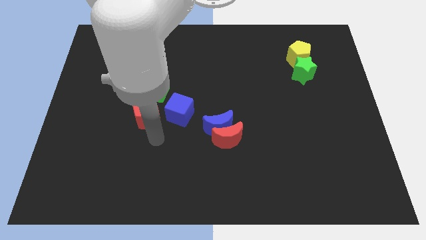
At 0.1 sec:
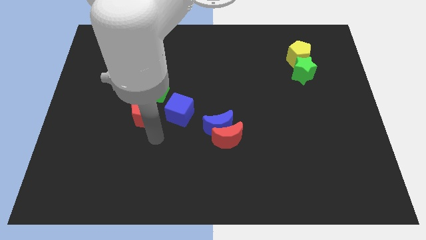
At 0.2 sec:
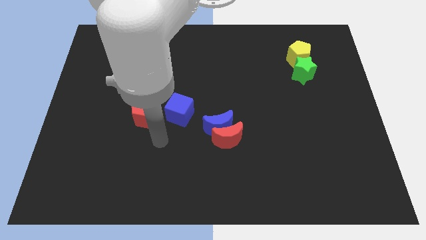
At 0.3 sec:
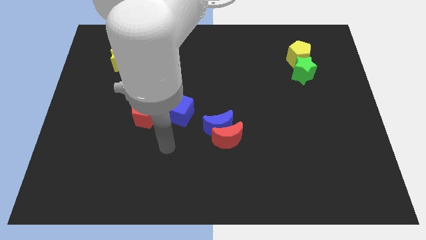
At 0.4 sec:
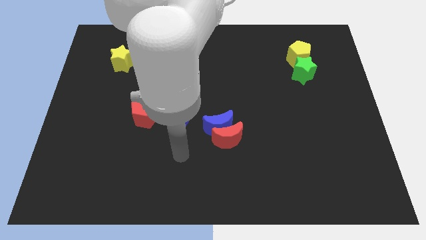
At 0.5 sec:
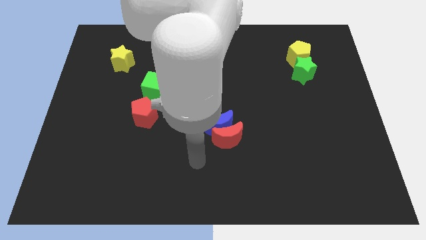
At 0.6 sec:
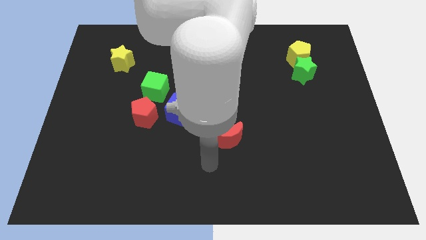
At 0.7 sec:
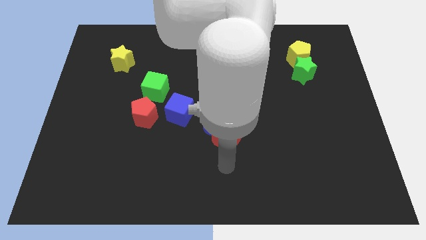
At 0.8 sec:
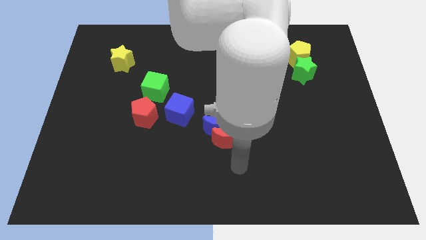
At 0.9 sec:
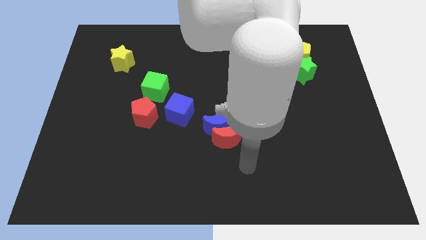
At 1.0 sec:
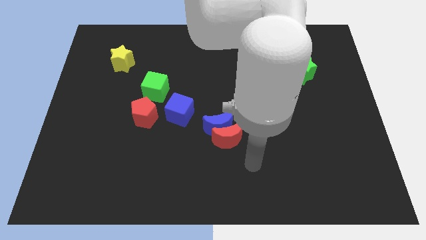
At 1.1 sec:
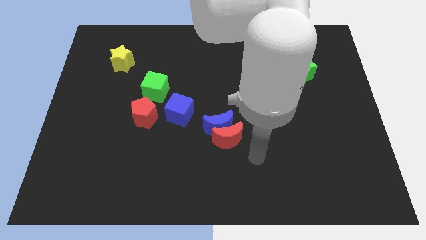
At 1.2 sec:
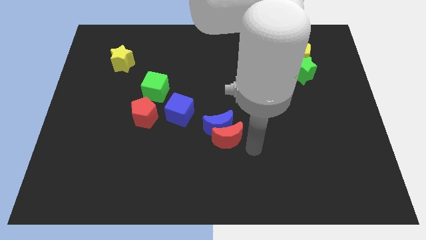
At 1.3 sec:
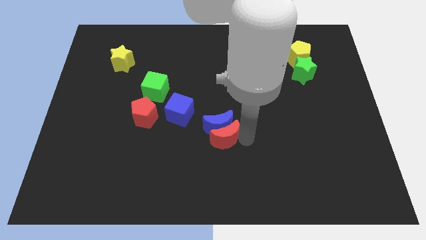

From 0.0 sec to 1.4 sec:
move the arm away from the red pentagon

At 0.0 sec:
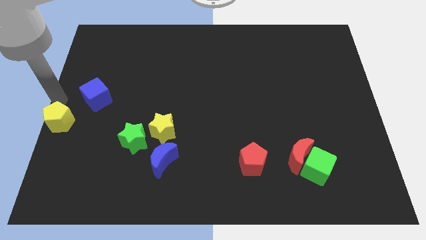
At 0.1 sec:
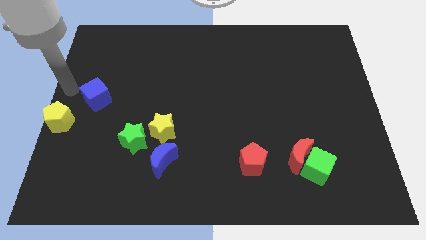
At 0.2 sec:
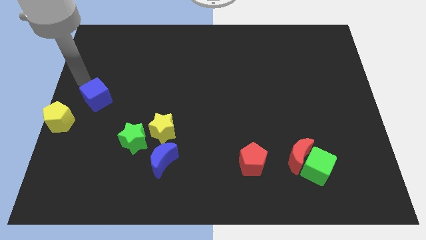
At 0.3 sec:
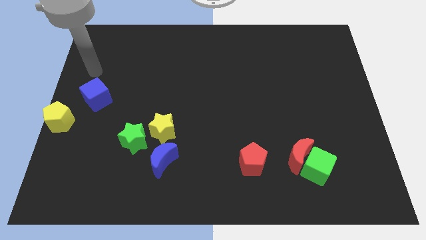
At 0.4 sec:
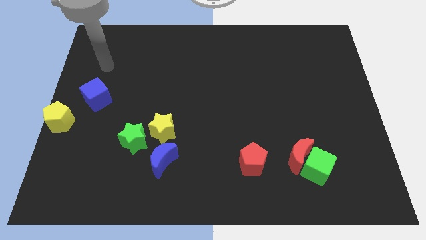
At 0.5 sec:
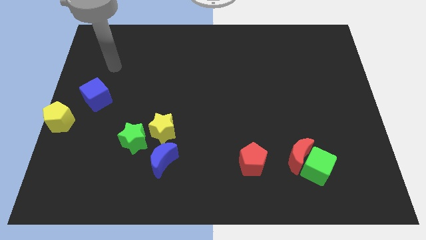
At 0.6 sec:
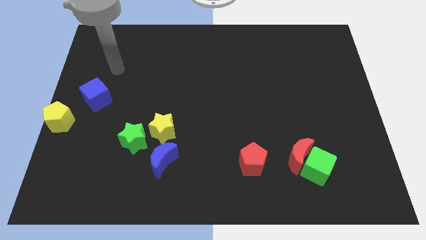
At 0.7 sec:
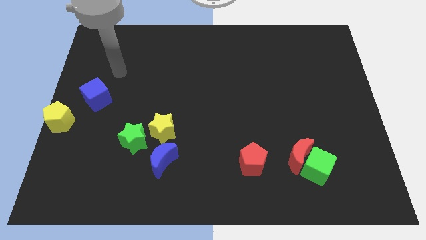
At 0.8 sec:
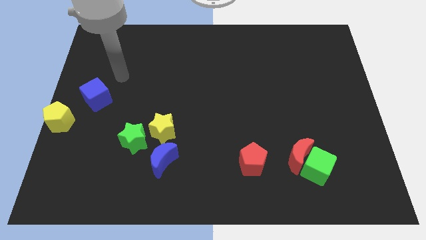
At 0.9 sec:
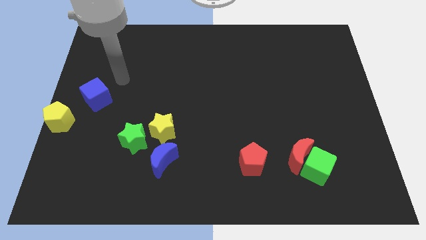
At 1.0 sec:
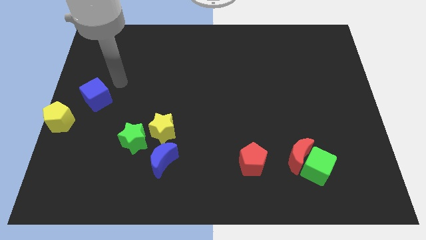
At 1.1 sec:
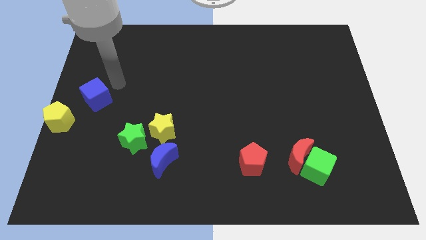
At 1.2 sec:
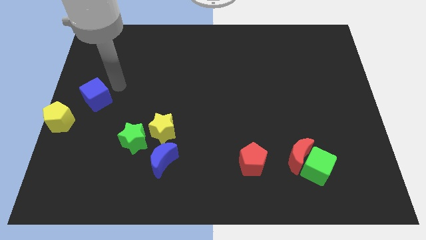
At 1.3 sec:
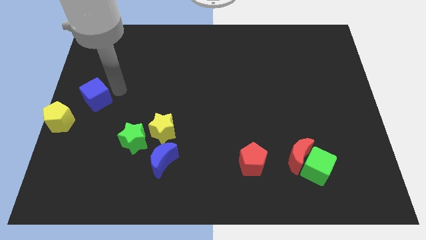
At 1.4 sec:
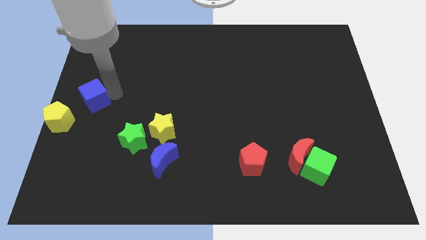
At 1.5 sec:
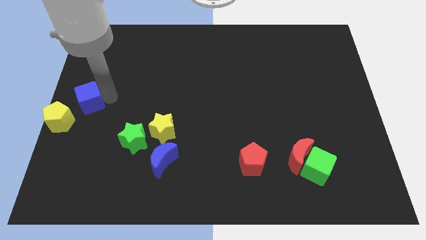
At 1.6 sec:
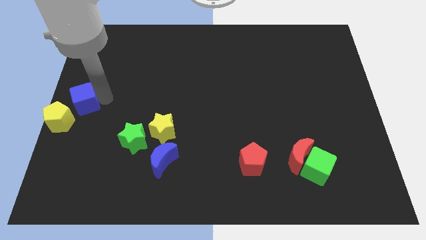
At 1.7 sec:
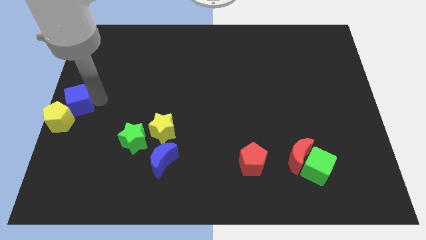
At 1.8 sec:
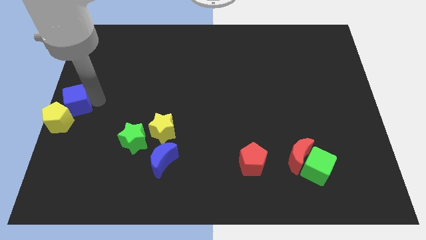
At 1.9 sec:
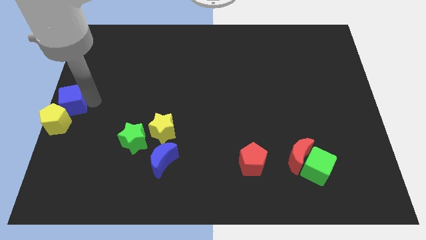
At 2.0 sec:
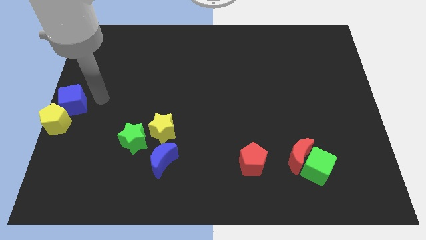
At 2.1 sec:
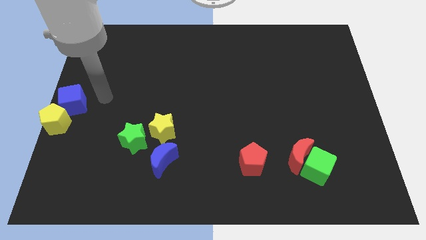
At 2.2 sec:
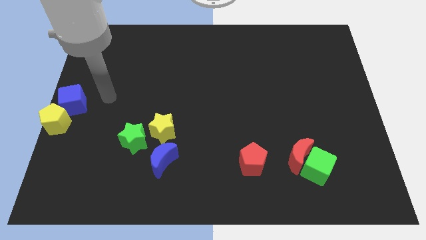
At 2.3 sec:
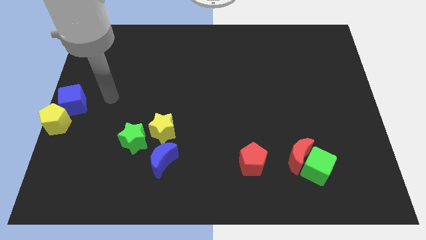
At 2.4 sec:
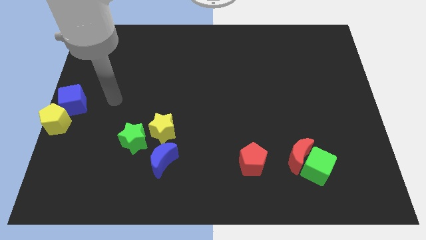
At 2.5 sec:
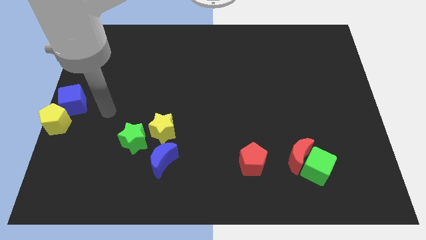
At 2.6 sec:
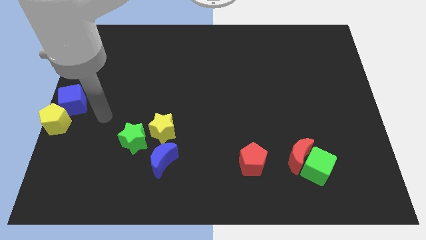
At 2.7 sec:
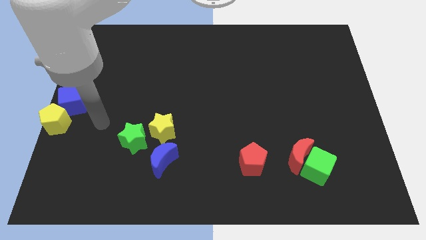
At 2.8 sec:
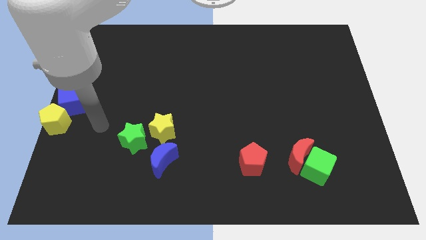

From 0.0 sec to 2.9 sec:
push the blue cube into the yellow pentagon

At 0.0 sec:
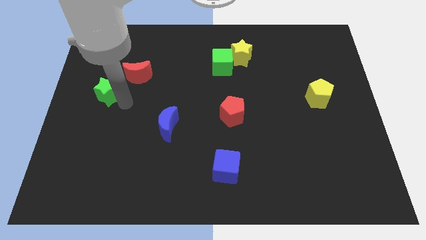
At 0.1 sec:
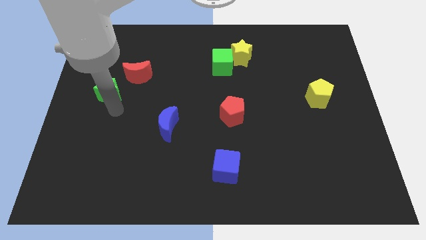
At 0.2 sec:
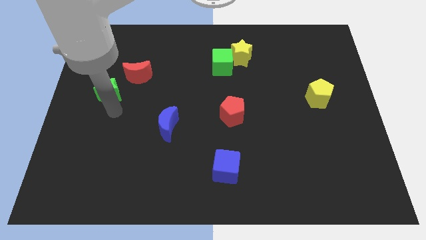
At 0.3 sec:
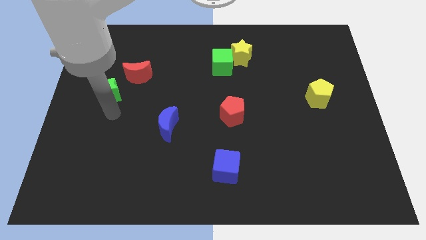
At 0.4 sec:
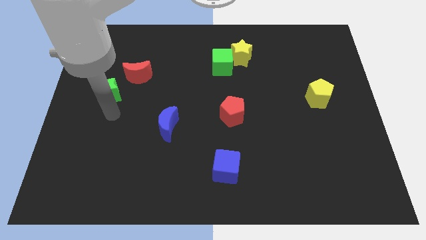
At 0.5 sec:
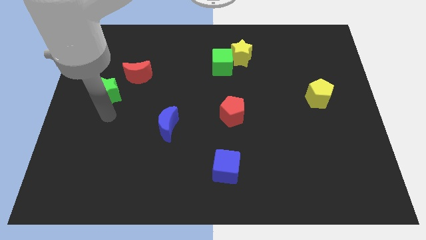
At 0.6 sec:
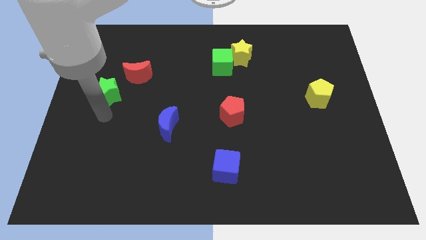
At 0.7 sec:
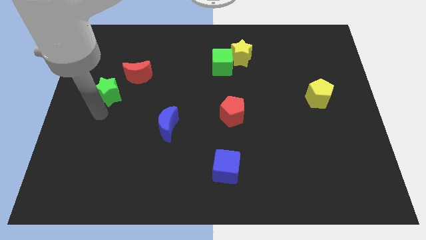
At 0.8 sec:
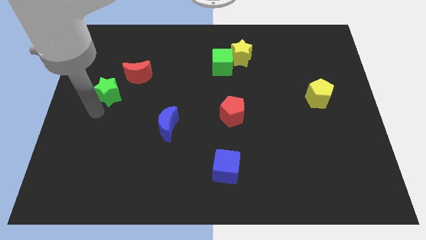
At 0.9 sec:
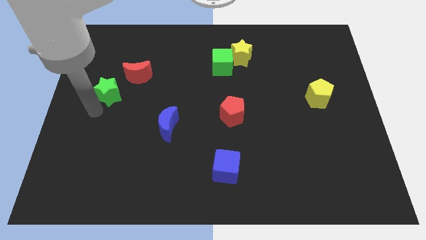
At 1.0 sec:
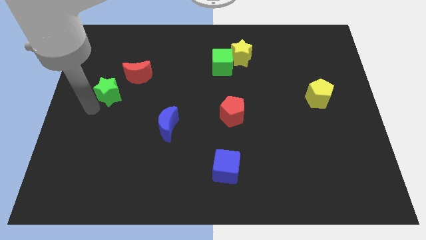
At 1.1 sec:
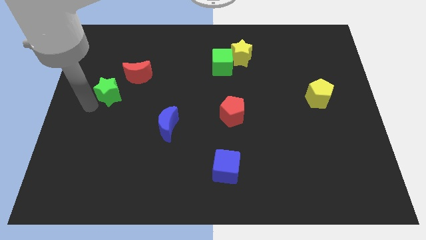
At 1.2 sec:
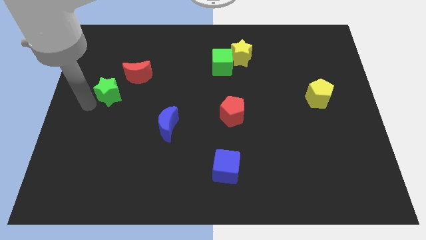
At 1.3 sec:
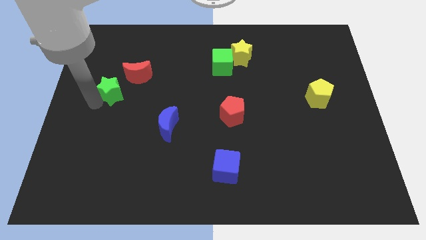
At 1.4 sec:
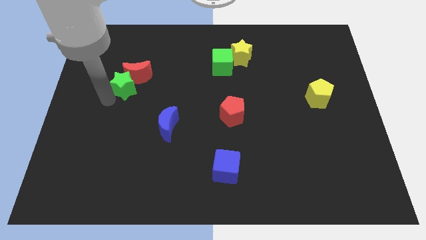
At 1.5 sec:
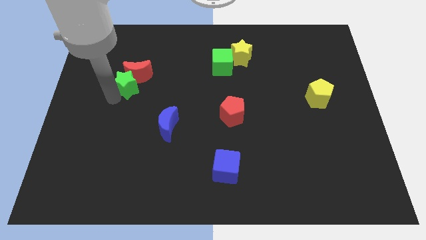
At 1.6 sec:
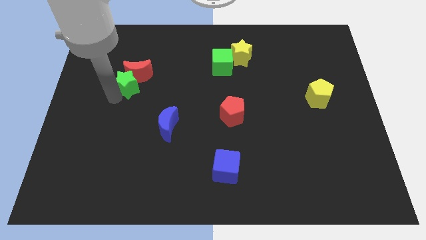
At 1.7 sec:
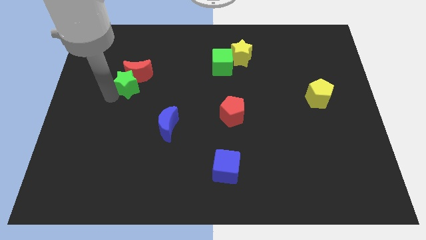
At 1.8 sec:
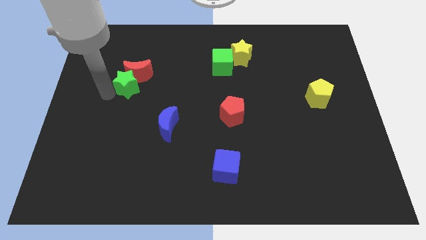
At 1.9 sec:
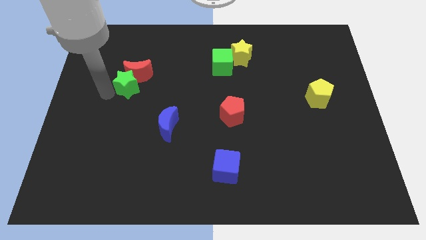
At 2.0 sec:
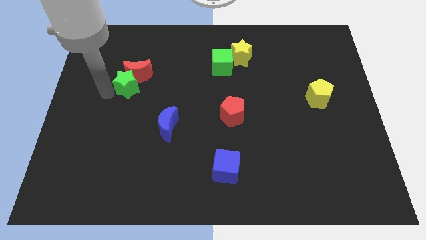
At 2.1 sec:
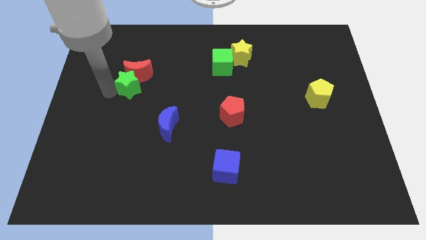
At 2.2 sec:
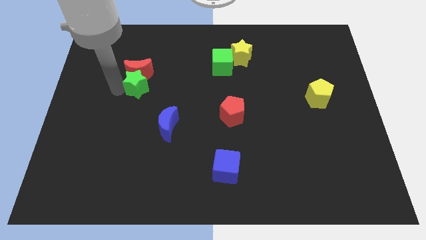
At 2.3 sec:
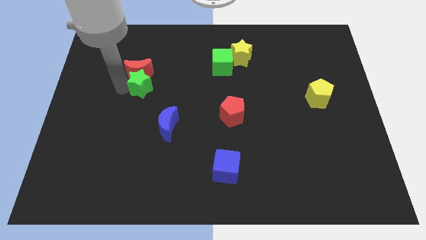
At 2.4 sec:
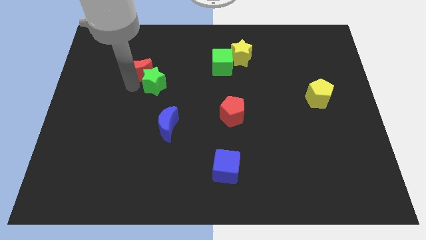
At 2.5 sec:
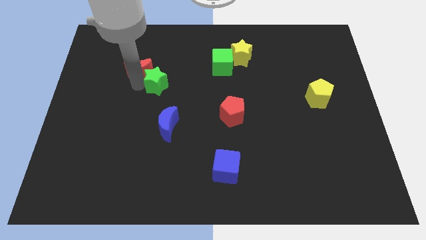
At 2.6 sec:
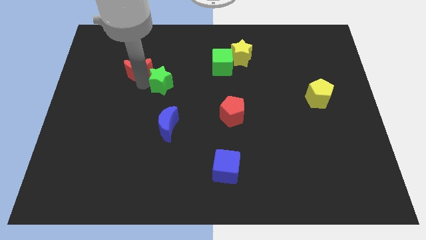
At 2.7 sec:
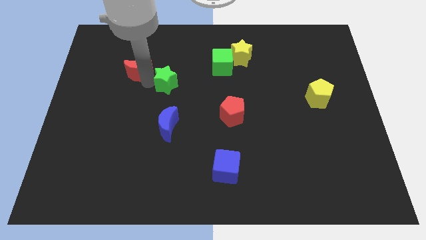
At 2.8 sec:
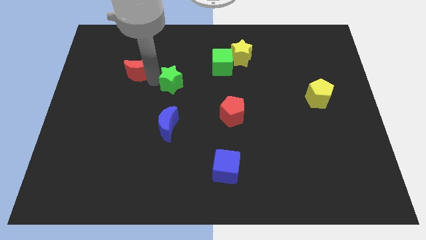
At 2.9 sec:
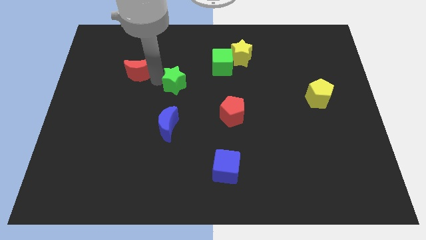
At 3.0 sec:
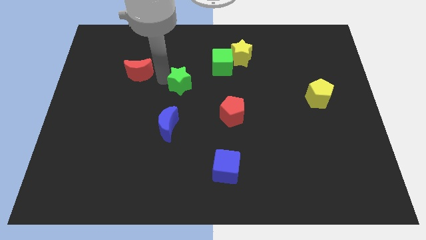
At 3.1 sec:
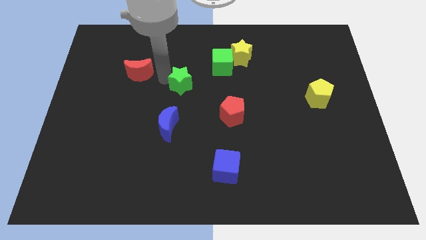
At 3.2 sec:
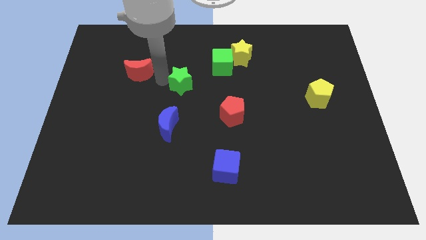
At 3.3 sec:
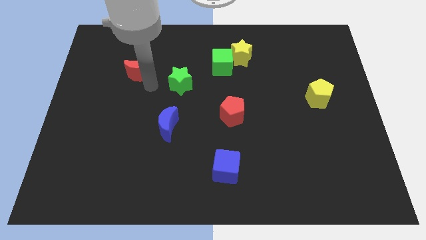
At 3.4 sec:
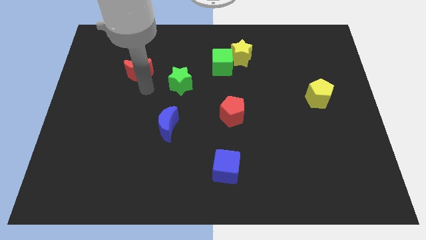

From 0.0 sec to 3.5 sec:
place the green star above the blue moon

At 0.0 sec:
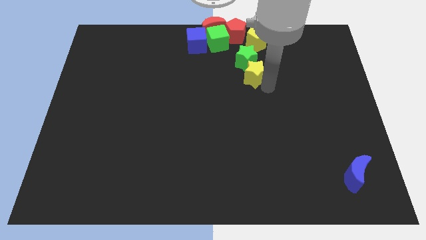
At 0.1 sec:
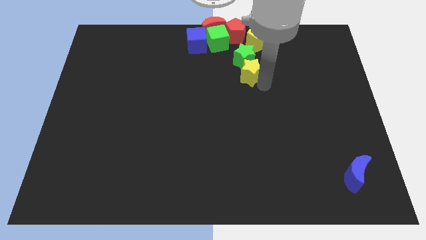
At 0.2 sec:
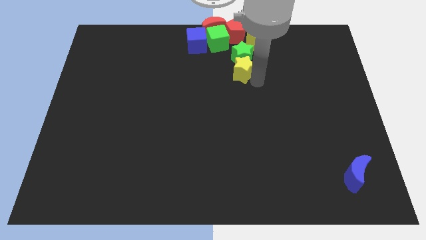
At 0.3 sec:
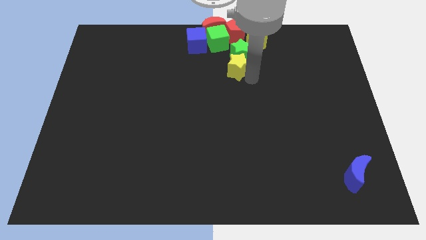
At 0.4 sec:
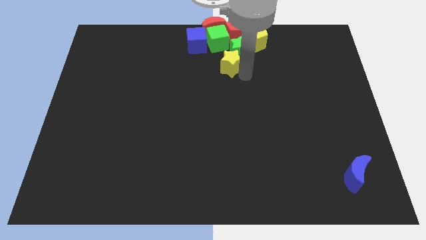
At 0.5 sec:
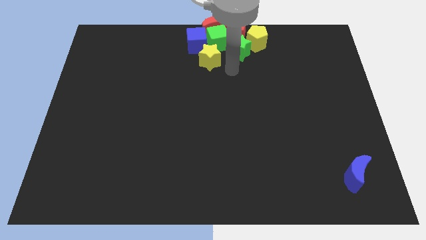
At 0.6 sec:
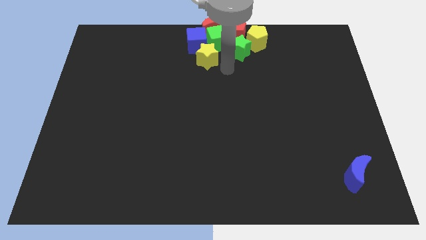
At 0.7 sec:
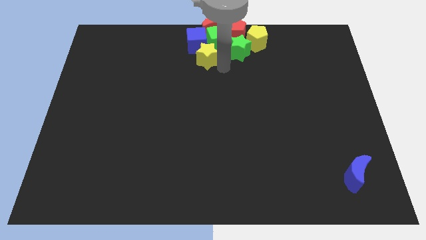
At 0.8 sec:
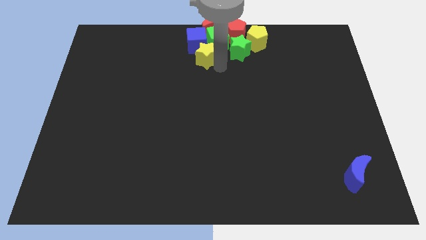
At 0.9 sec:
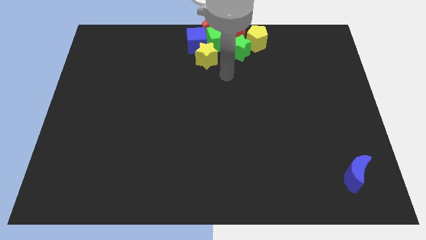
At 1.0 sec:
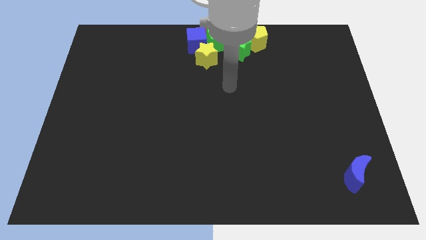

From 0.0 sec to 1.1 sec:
push the yellow star below the blue cube
